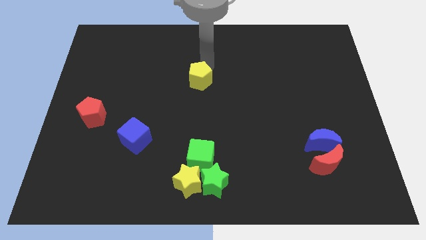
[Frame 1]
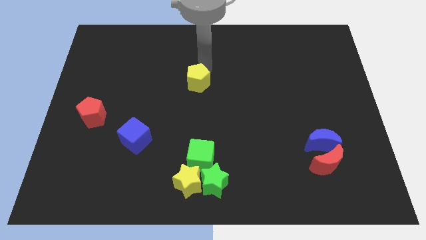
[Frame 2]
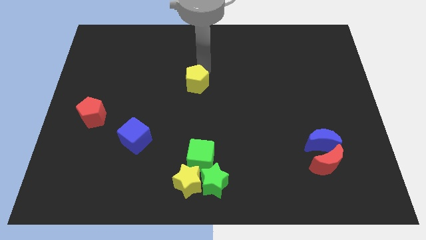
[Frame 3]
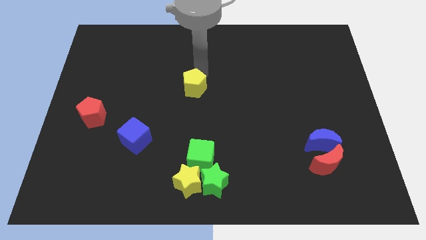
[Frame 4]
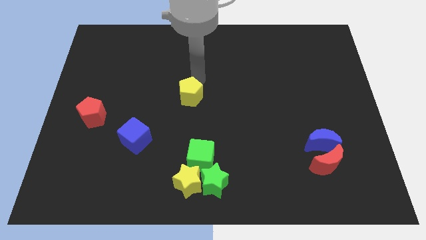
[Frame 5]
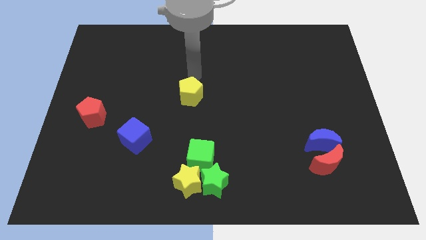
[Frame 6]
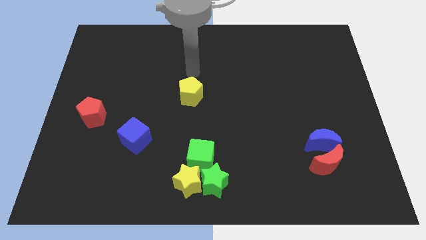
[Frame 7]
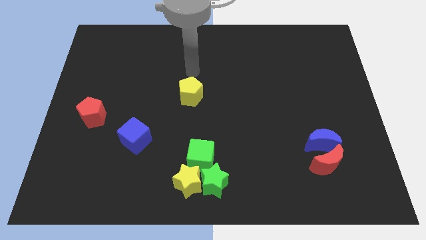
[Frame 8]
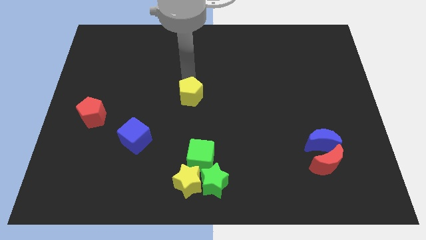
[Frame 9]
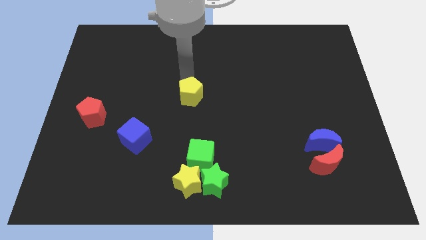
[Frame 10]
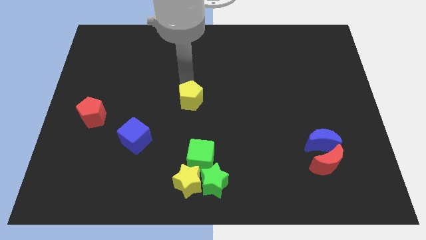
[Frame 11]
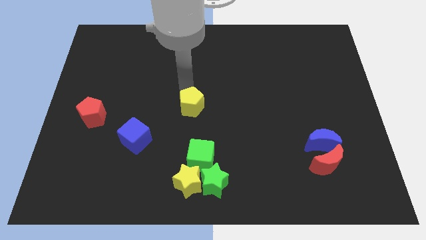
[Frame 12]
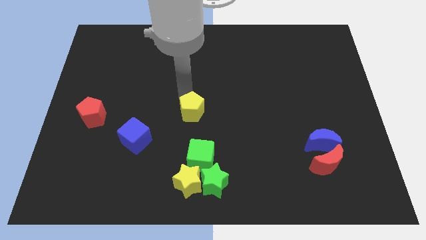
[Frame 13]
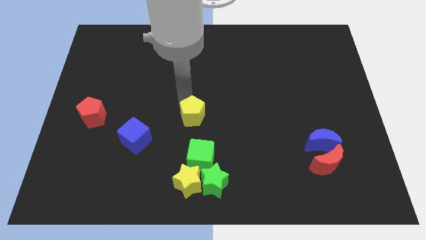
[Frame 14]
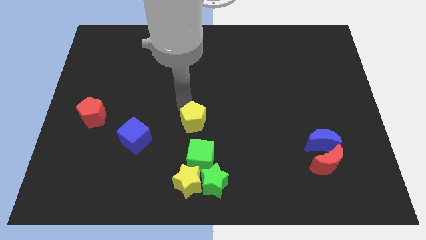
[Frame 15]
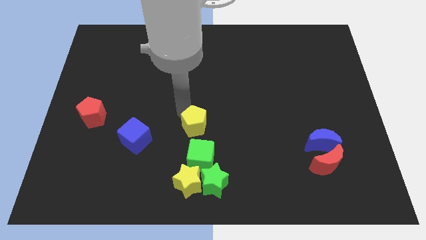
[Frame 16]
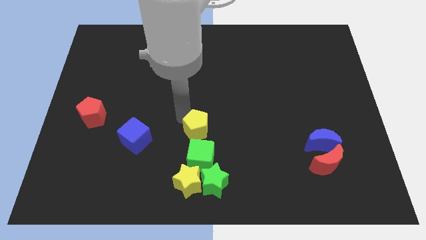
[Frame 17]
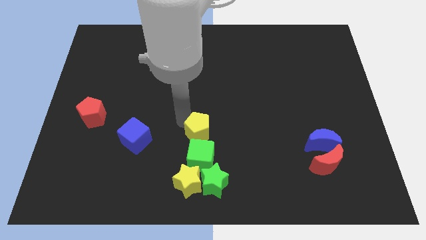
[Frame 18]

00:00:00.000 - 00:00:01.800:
move the yellow pentagon to the right of the blue cube

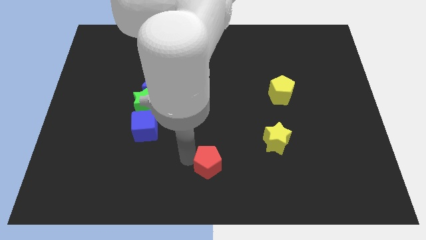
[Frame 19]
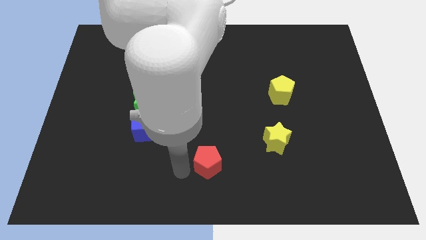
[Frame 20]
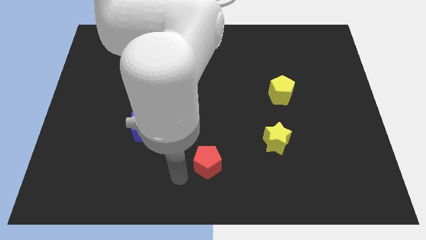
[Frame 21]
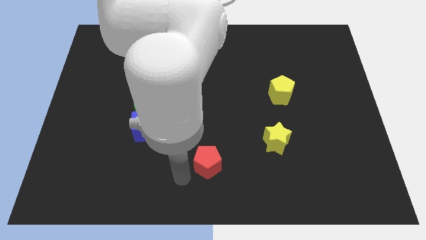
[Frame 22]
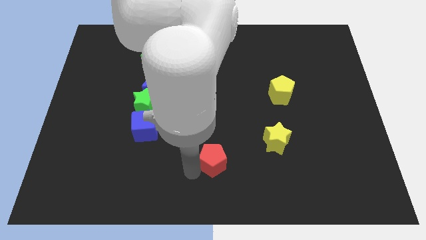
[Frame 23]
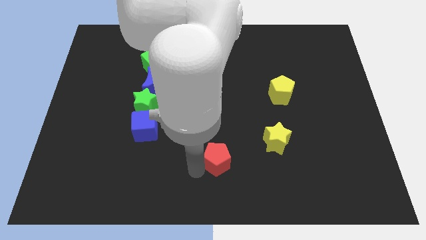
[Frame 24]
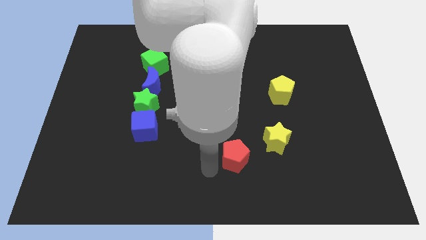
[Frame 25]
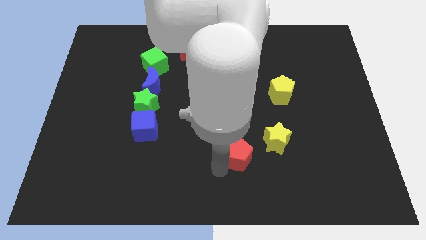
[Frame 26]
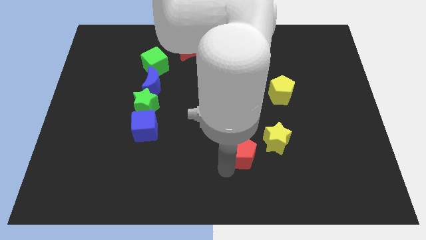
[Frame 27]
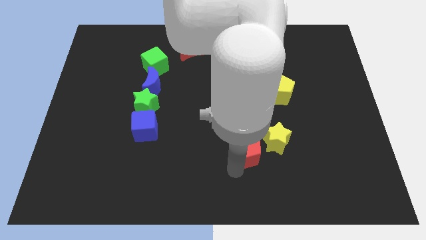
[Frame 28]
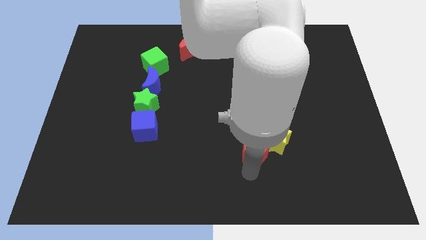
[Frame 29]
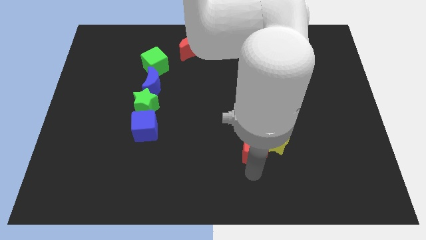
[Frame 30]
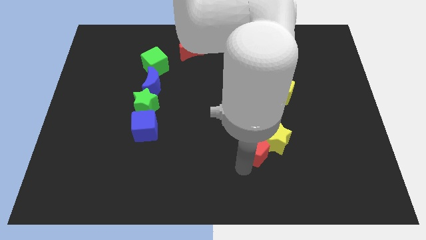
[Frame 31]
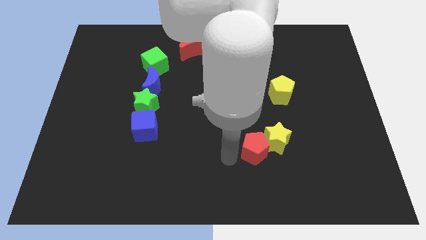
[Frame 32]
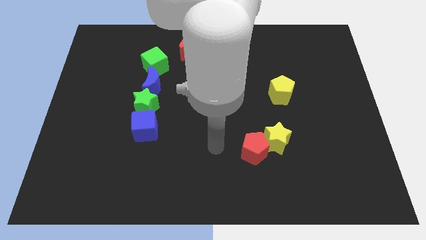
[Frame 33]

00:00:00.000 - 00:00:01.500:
place the red pentagon diagonal to the yellow star

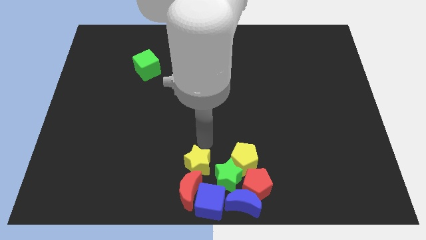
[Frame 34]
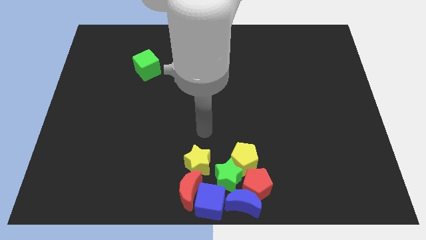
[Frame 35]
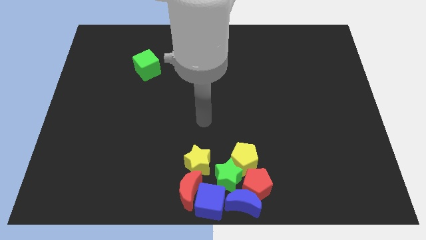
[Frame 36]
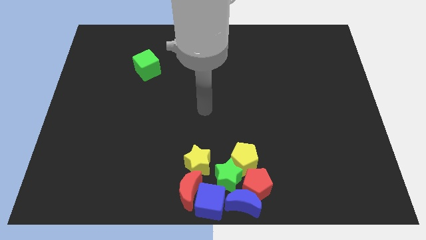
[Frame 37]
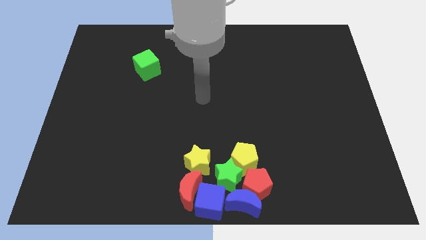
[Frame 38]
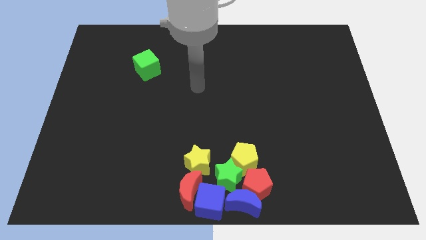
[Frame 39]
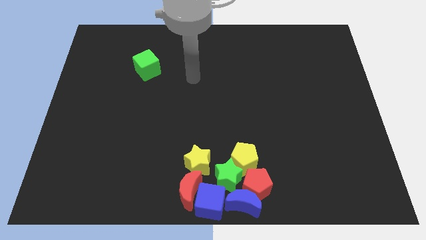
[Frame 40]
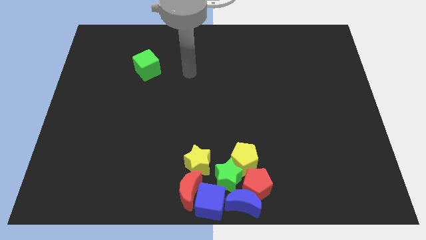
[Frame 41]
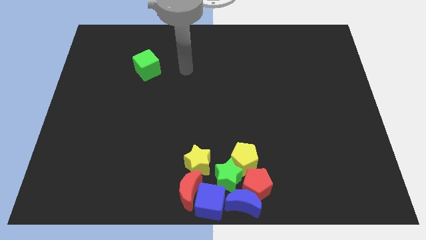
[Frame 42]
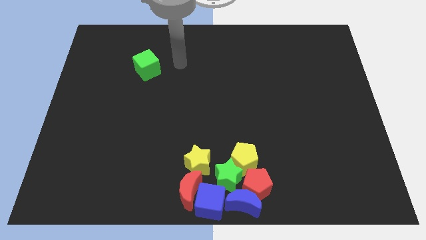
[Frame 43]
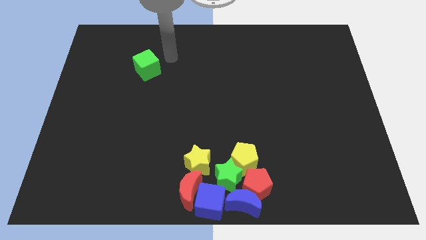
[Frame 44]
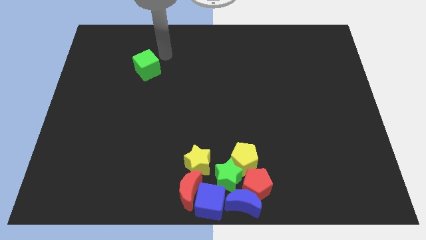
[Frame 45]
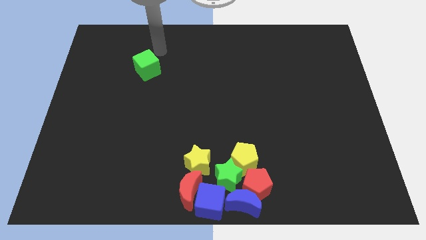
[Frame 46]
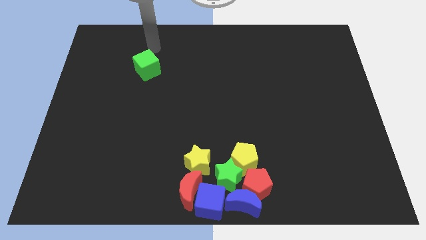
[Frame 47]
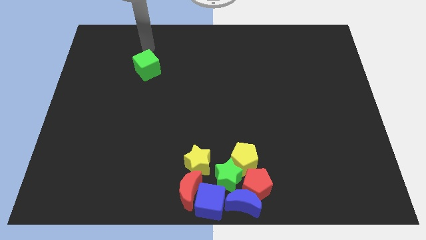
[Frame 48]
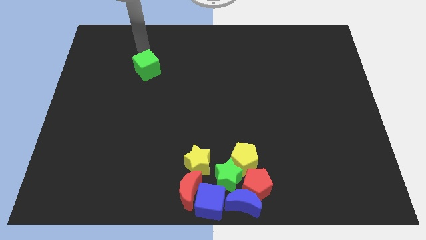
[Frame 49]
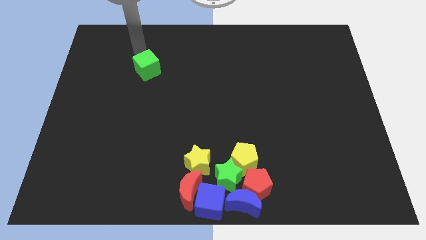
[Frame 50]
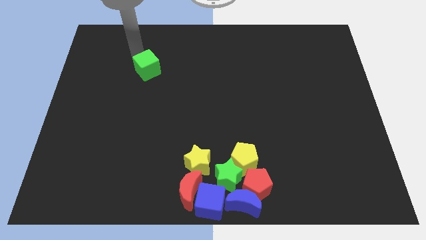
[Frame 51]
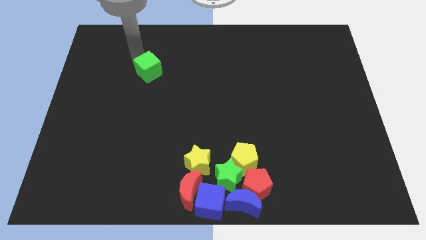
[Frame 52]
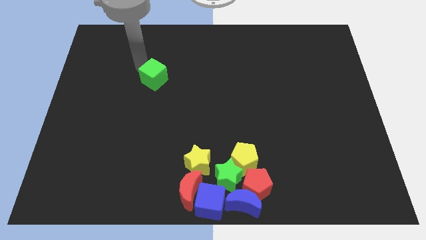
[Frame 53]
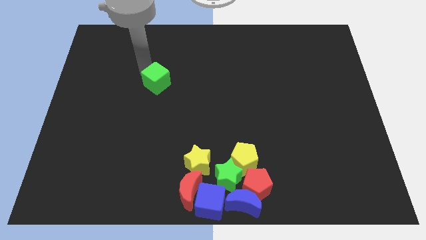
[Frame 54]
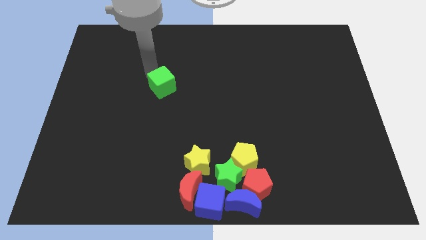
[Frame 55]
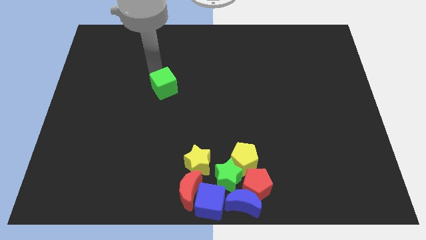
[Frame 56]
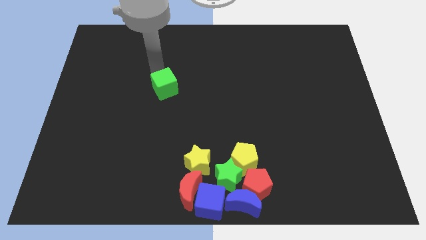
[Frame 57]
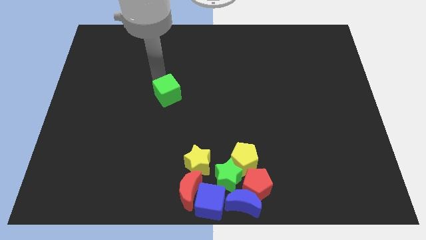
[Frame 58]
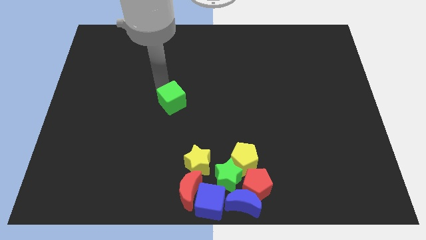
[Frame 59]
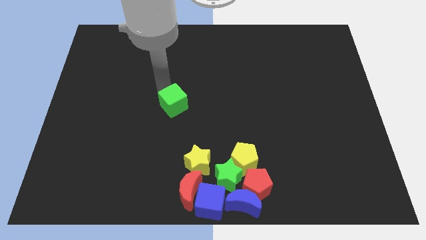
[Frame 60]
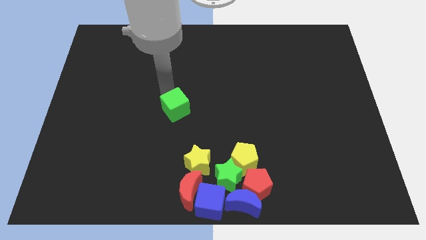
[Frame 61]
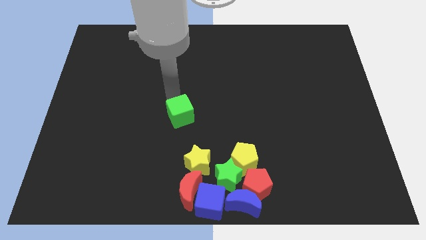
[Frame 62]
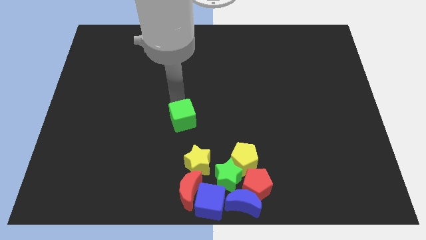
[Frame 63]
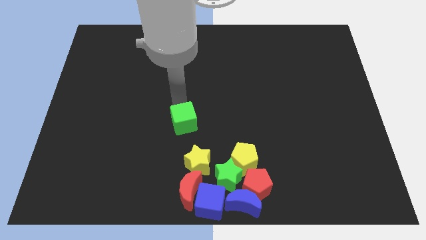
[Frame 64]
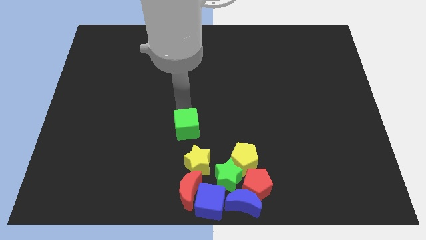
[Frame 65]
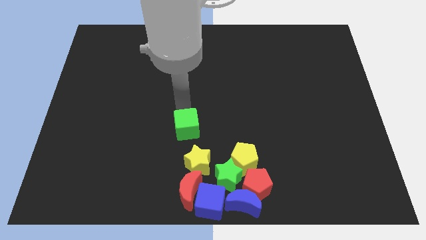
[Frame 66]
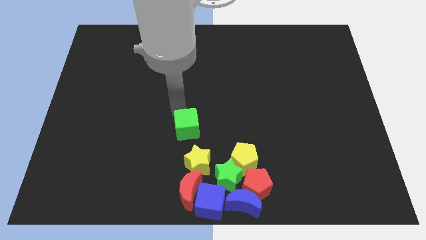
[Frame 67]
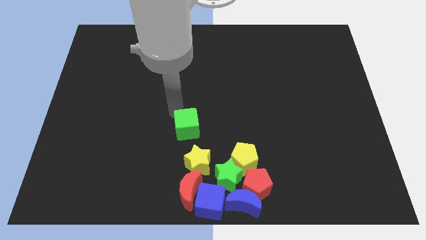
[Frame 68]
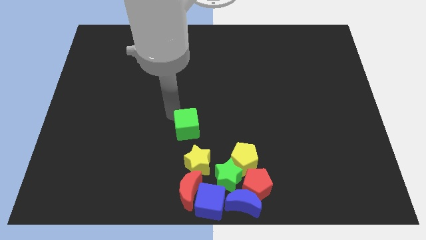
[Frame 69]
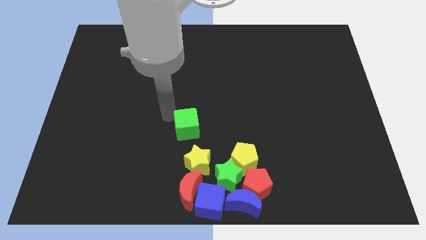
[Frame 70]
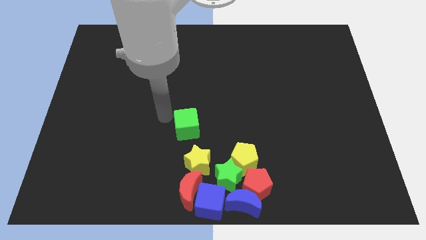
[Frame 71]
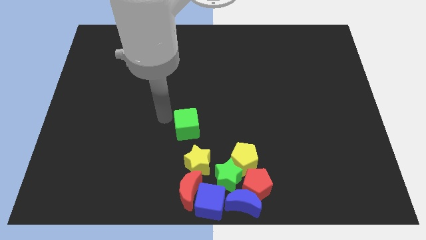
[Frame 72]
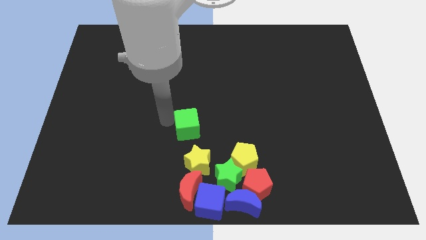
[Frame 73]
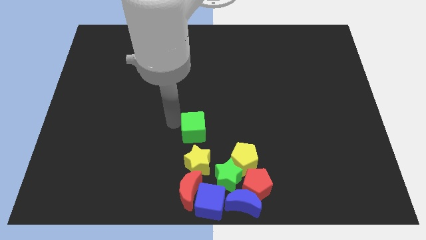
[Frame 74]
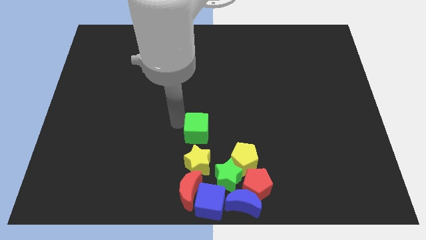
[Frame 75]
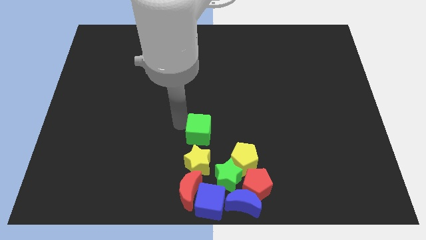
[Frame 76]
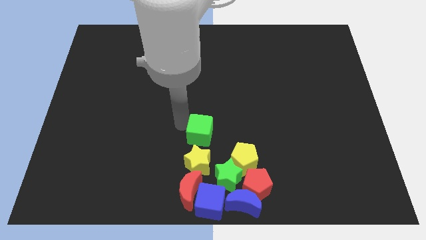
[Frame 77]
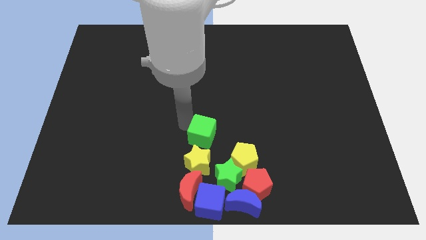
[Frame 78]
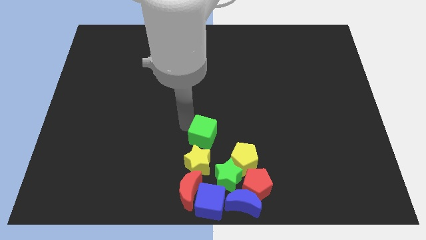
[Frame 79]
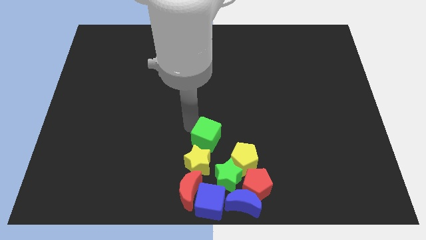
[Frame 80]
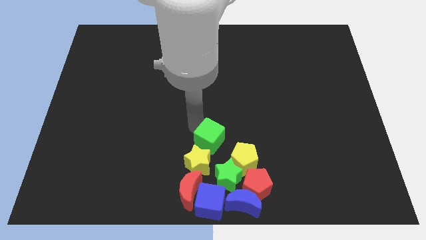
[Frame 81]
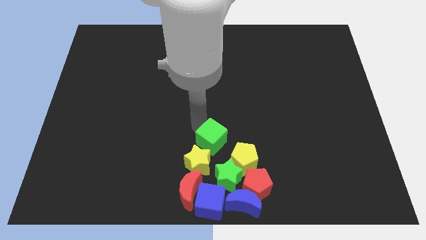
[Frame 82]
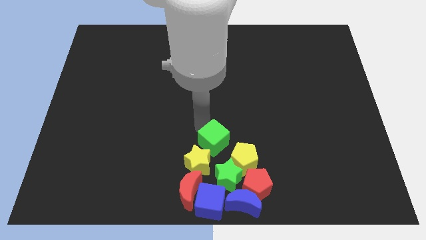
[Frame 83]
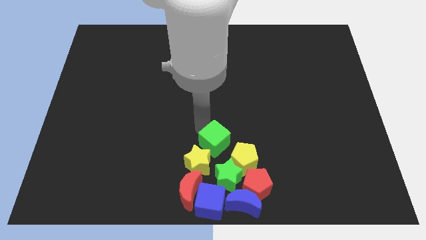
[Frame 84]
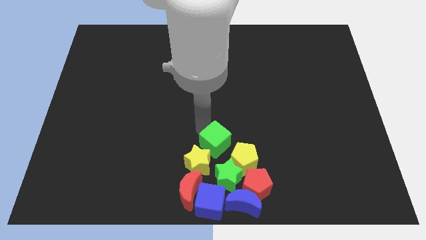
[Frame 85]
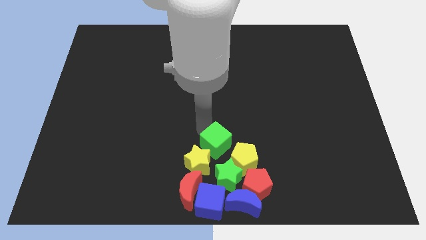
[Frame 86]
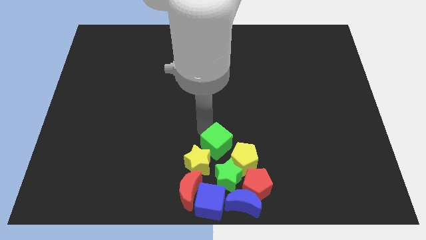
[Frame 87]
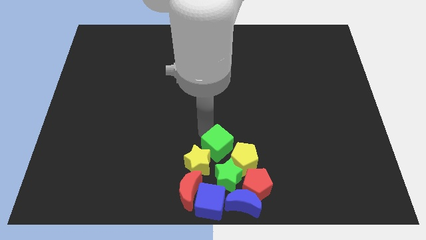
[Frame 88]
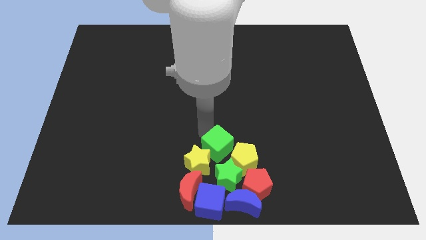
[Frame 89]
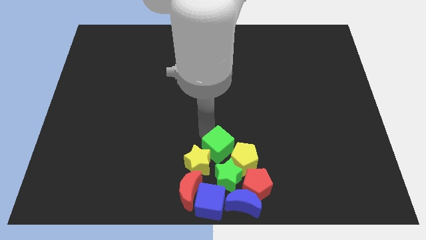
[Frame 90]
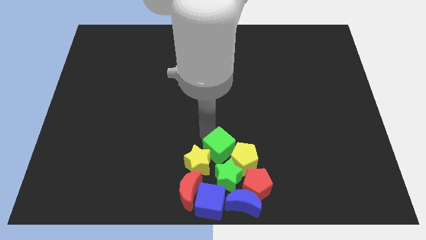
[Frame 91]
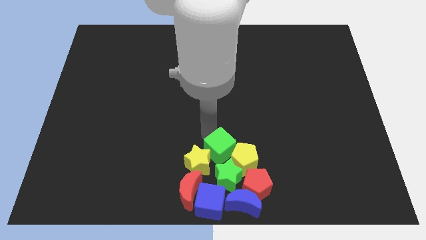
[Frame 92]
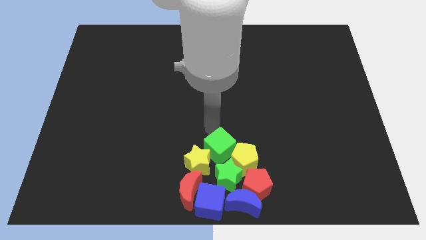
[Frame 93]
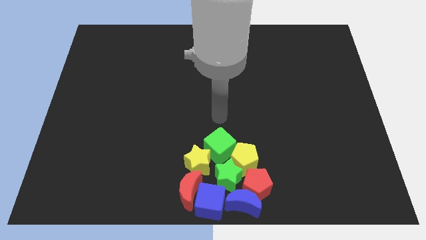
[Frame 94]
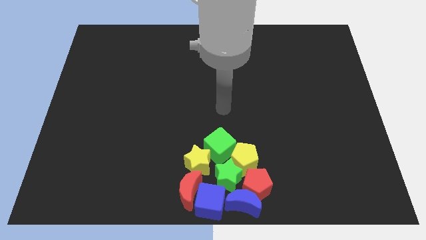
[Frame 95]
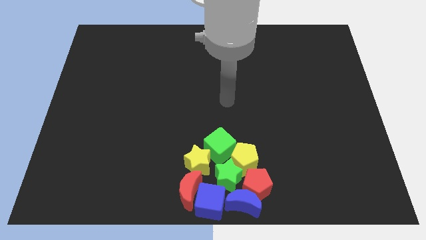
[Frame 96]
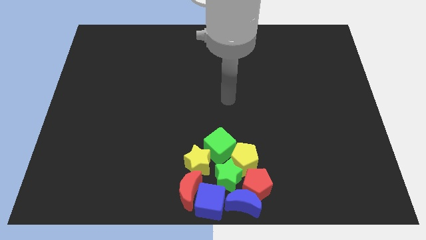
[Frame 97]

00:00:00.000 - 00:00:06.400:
push the green cube close to the group of blocks
